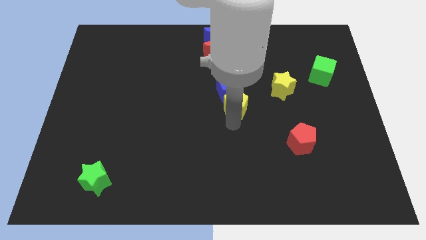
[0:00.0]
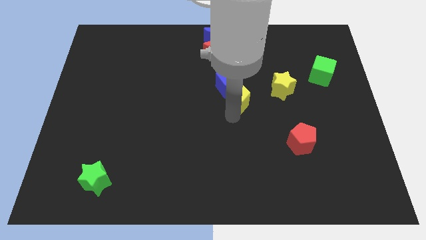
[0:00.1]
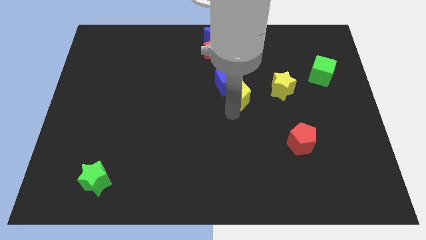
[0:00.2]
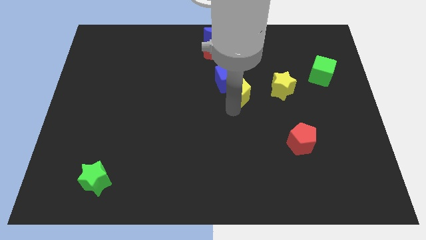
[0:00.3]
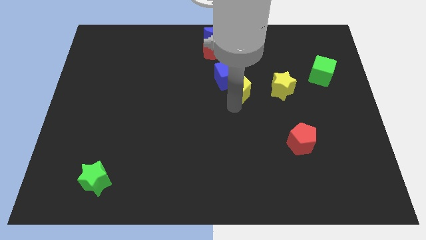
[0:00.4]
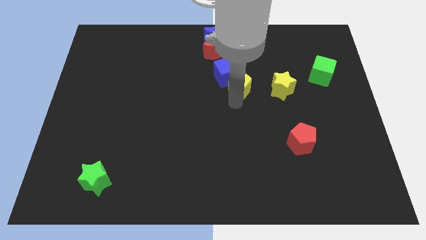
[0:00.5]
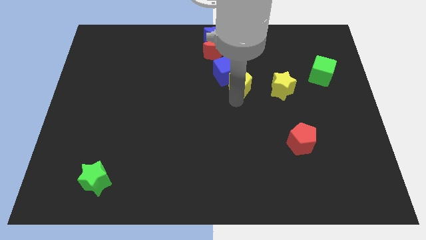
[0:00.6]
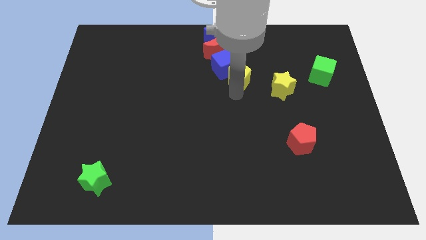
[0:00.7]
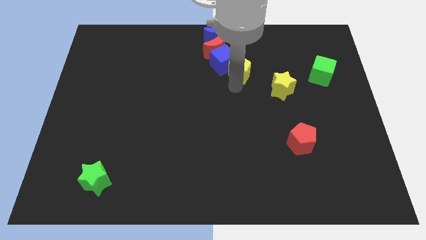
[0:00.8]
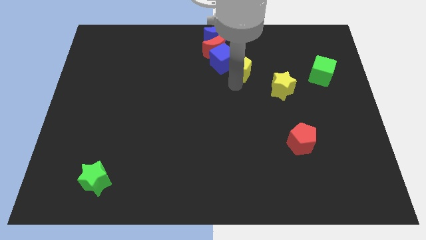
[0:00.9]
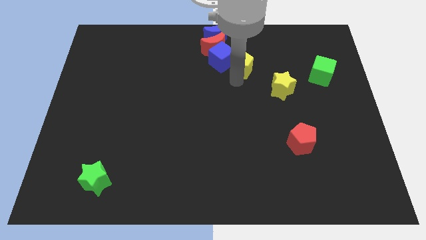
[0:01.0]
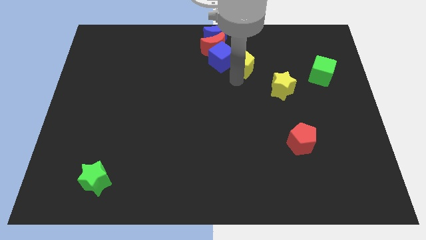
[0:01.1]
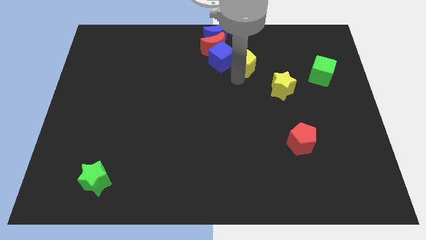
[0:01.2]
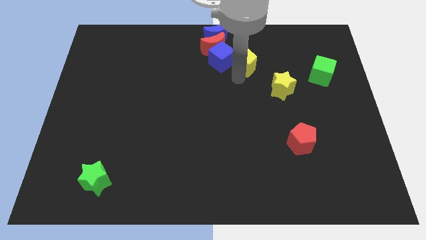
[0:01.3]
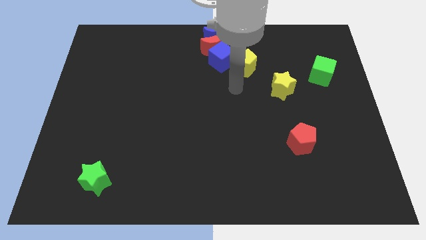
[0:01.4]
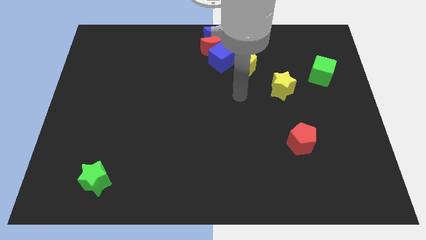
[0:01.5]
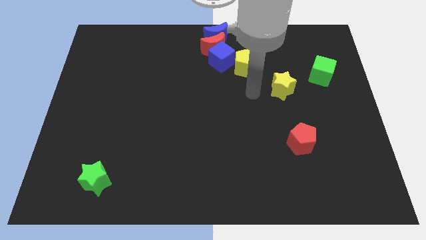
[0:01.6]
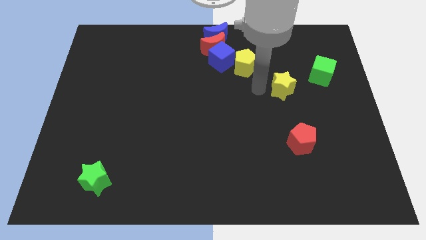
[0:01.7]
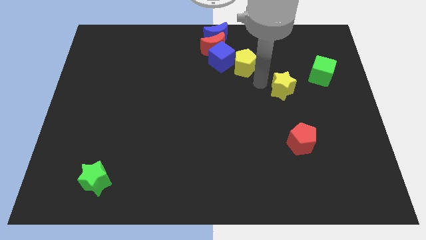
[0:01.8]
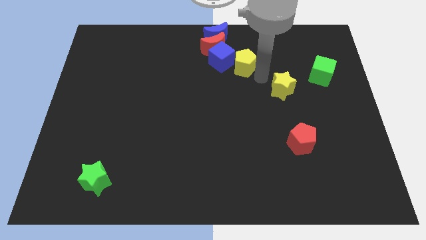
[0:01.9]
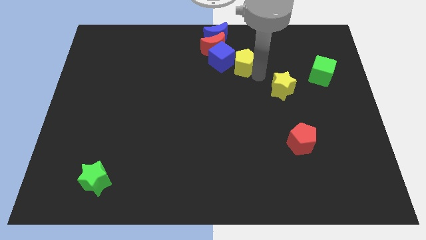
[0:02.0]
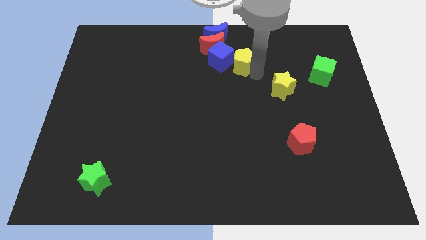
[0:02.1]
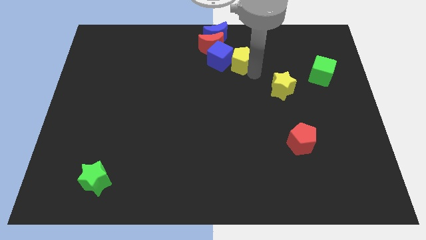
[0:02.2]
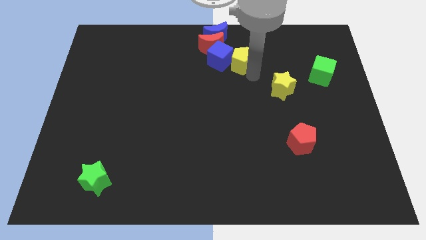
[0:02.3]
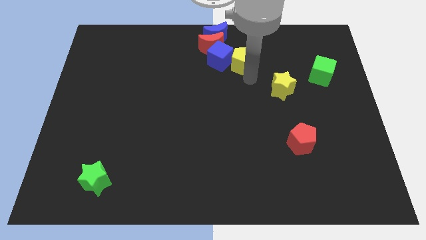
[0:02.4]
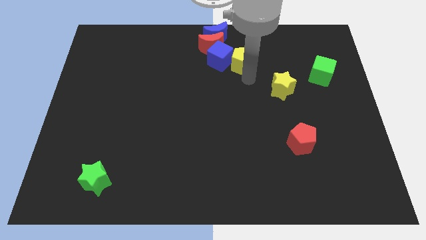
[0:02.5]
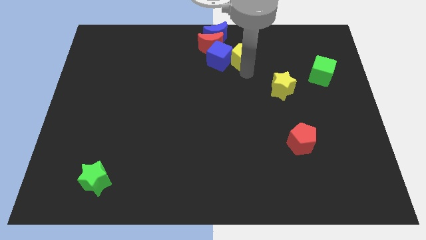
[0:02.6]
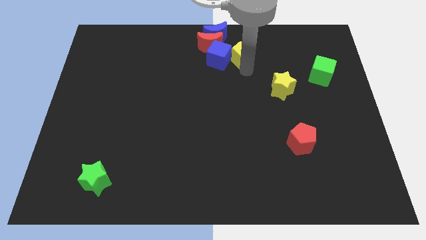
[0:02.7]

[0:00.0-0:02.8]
place the yellow pentagon to the right of the blue cube

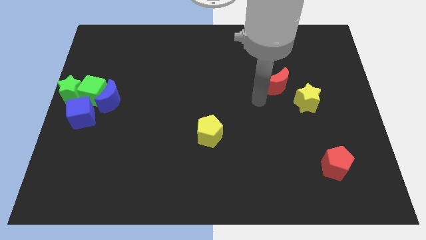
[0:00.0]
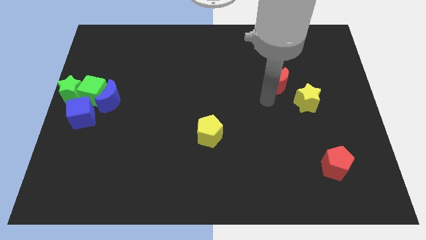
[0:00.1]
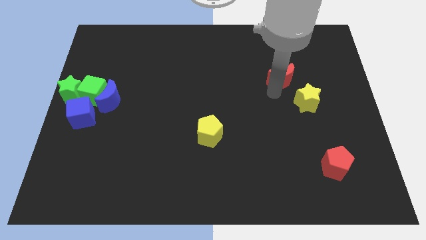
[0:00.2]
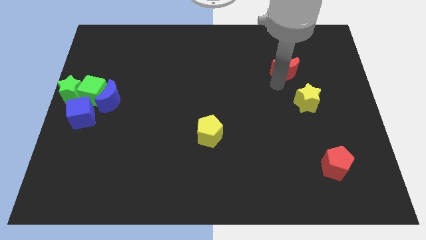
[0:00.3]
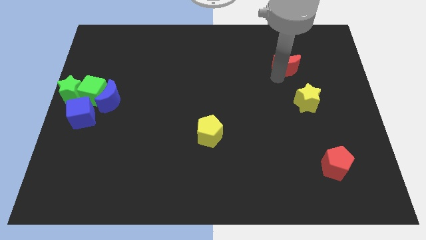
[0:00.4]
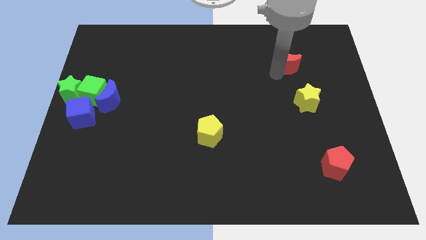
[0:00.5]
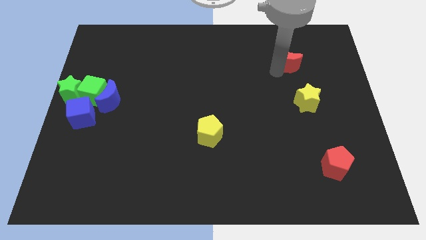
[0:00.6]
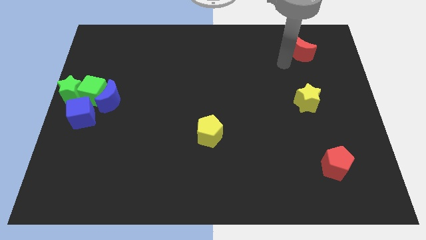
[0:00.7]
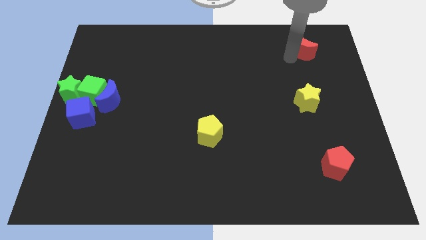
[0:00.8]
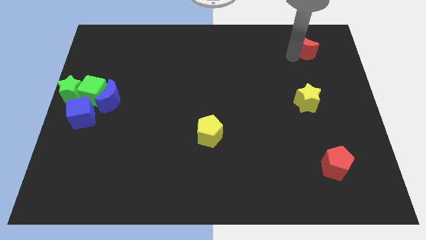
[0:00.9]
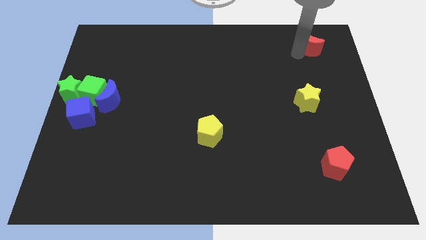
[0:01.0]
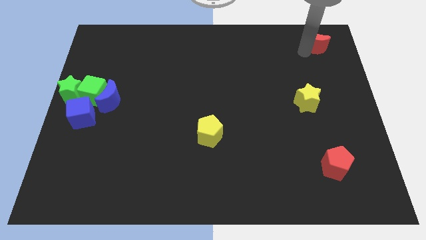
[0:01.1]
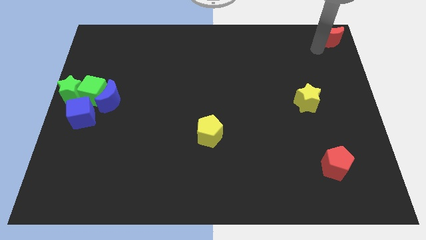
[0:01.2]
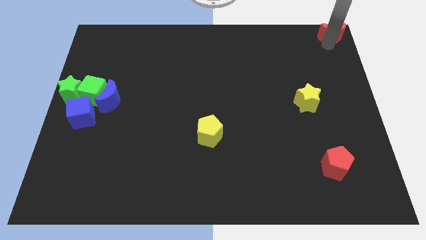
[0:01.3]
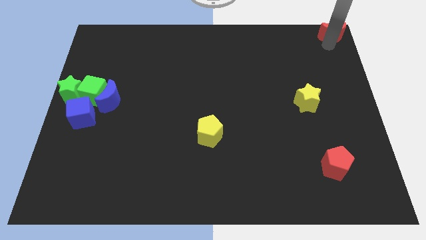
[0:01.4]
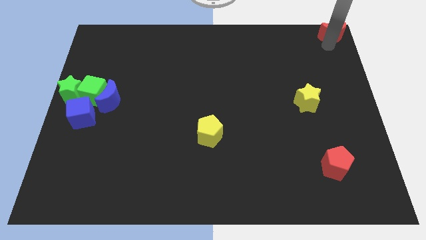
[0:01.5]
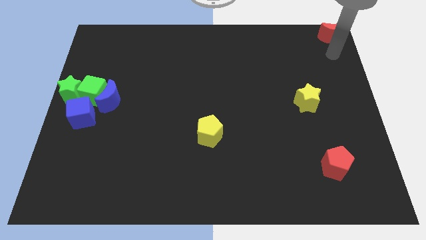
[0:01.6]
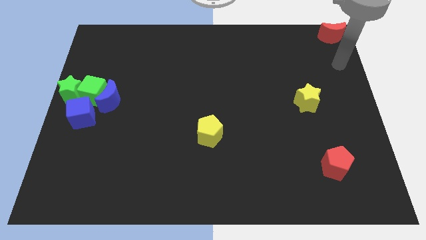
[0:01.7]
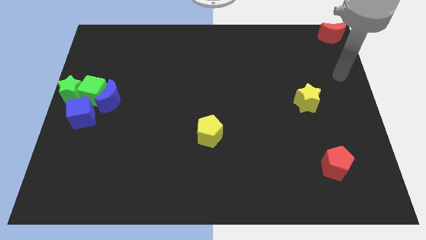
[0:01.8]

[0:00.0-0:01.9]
move the red crescent to the top right of the board

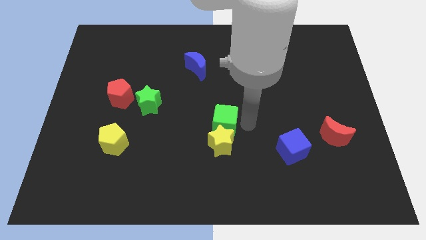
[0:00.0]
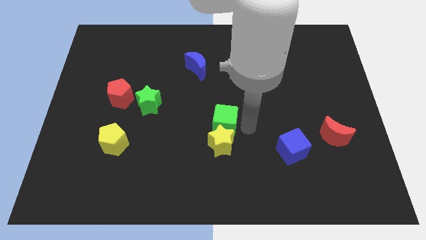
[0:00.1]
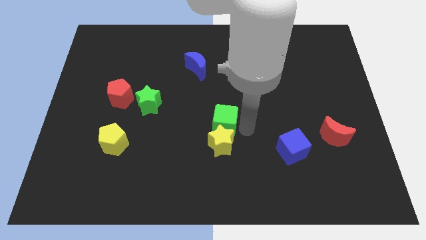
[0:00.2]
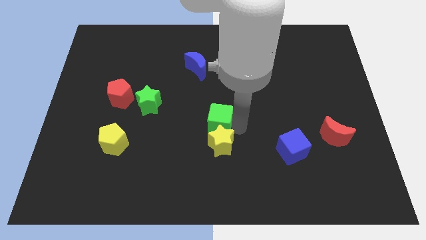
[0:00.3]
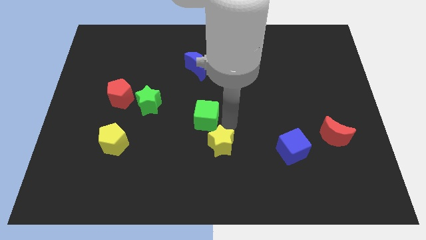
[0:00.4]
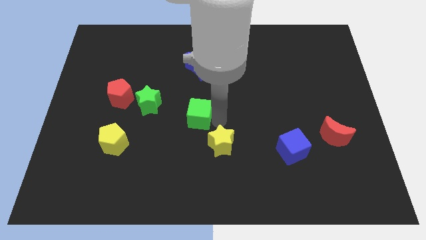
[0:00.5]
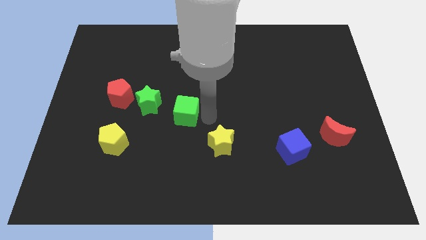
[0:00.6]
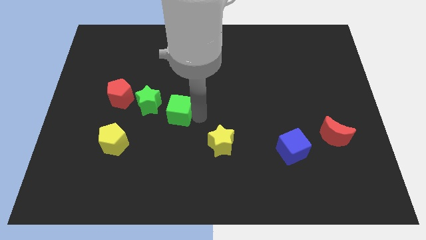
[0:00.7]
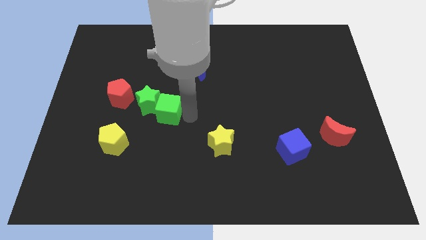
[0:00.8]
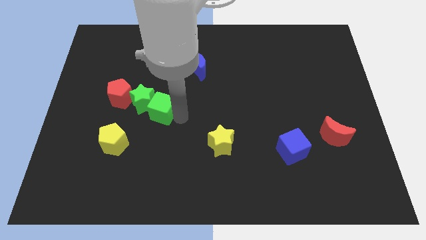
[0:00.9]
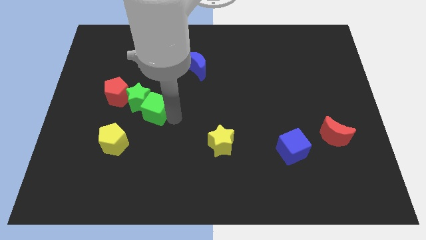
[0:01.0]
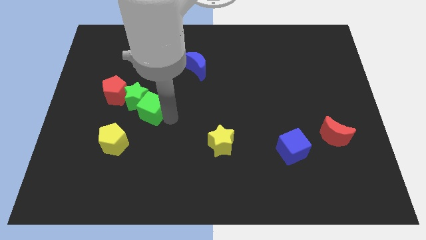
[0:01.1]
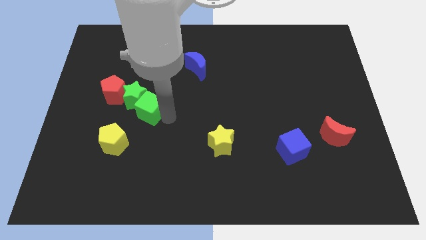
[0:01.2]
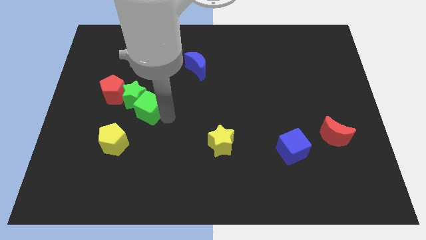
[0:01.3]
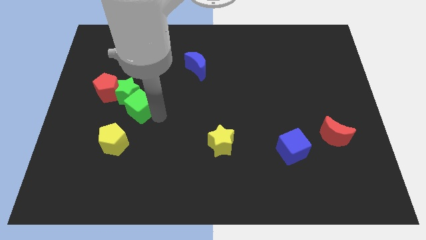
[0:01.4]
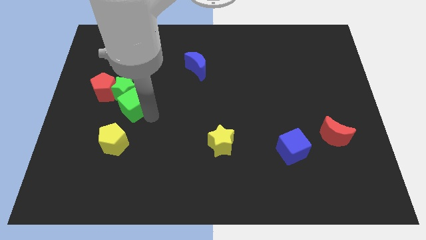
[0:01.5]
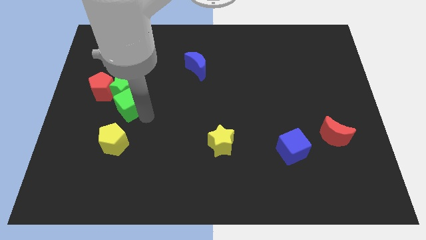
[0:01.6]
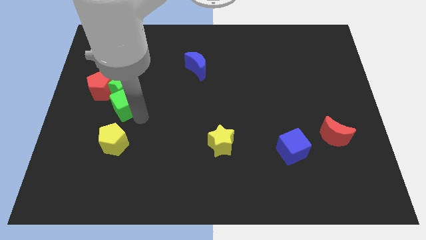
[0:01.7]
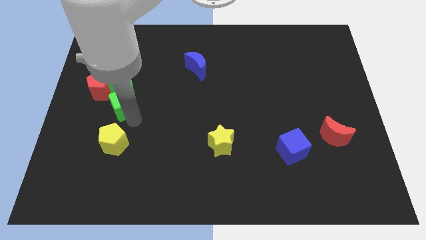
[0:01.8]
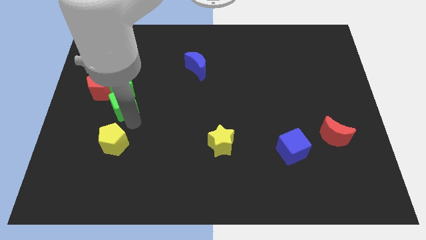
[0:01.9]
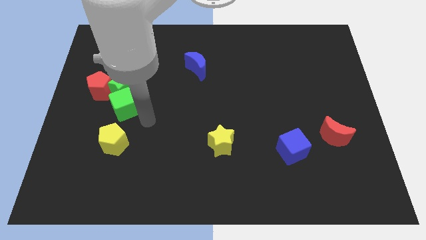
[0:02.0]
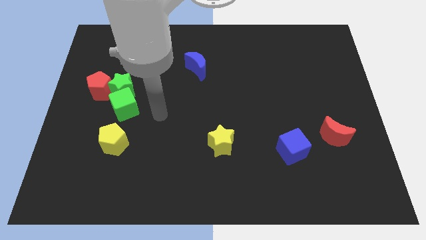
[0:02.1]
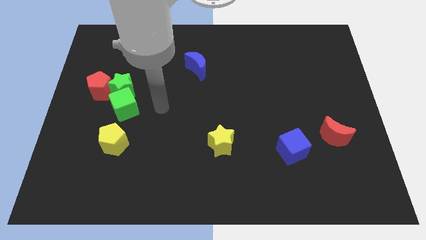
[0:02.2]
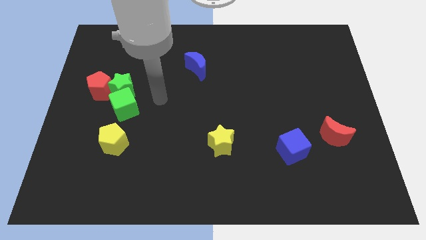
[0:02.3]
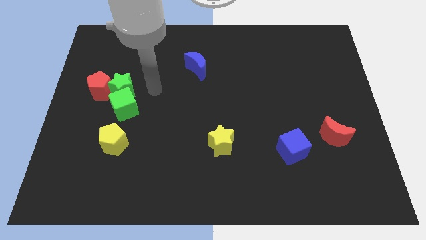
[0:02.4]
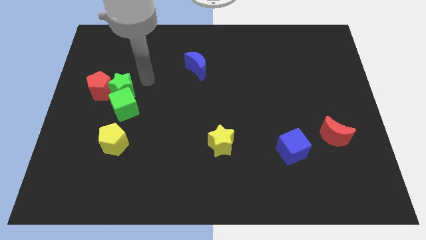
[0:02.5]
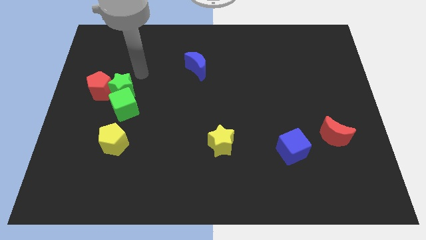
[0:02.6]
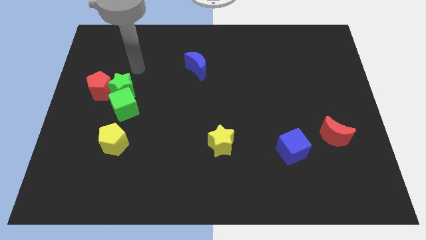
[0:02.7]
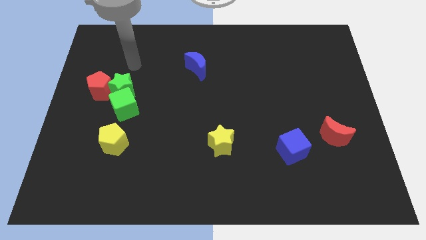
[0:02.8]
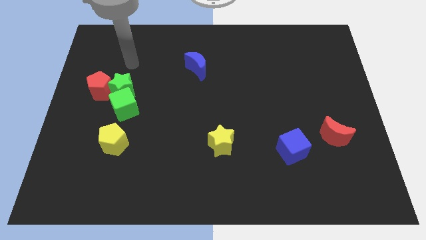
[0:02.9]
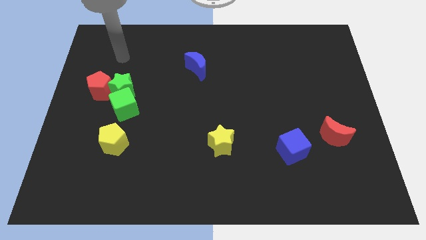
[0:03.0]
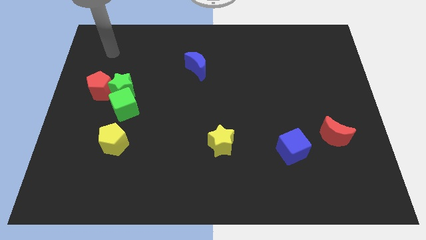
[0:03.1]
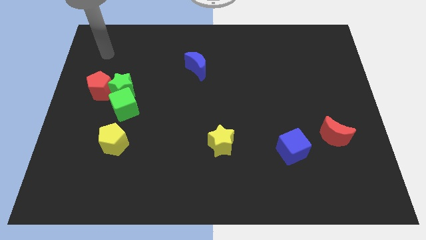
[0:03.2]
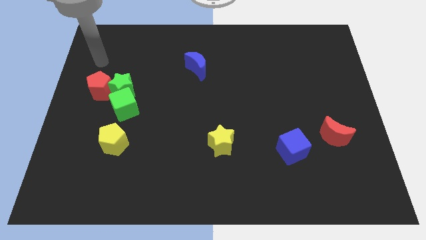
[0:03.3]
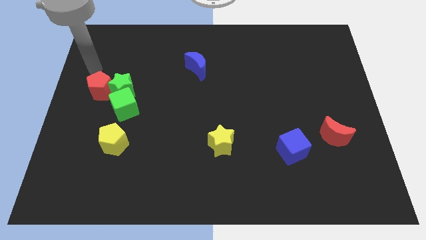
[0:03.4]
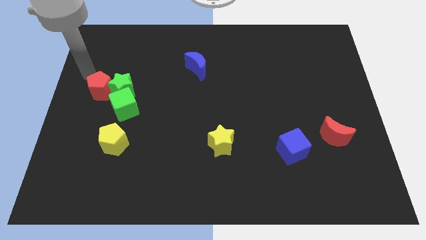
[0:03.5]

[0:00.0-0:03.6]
move green cube along with green star and red pentagon towards the left centre of the board

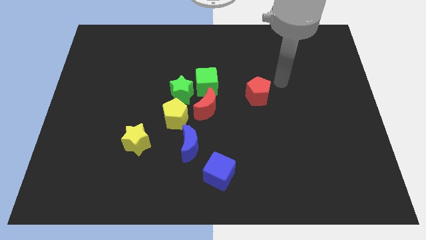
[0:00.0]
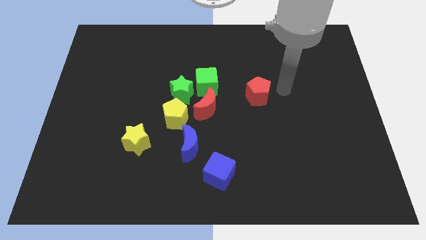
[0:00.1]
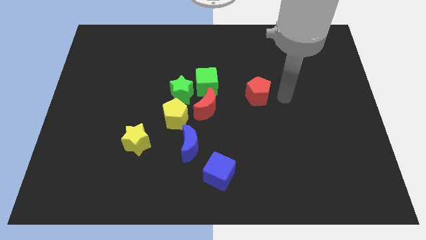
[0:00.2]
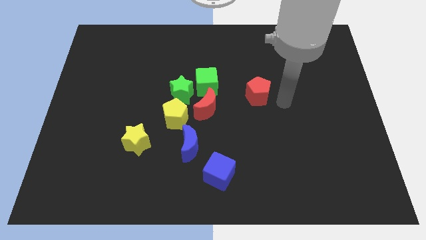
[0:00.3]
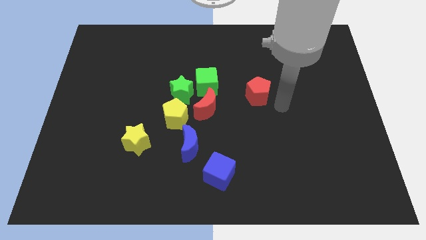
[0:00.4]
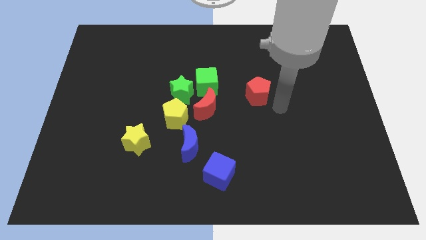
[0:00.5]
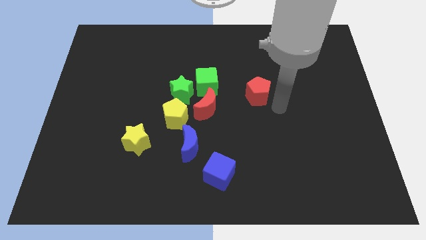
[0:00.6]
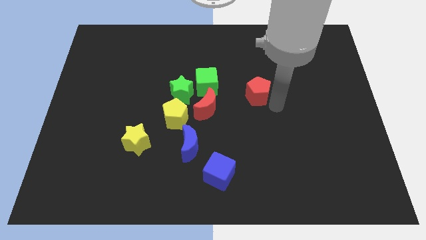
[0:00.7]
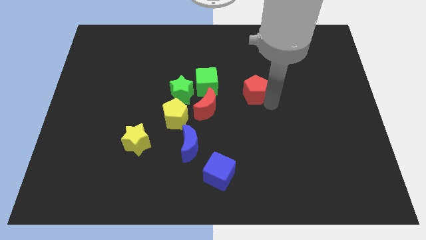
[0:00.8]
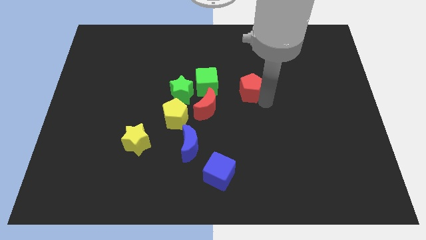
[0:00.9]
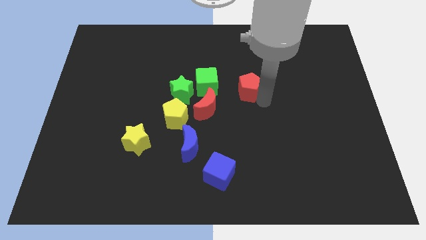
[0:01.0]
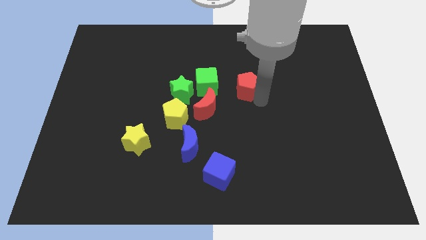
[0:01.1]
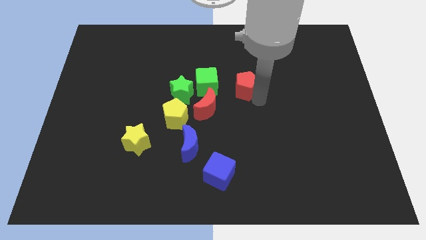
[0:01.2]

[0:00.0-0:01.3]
move the red pentagon slightly left
